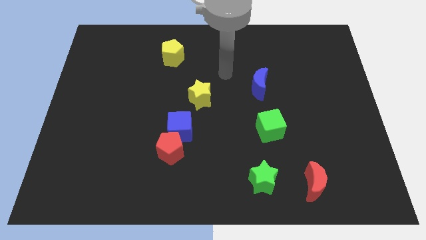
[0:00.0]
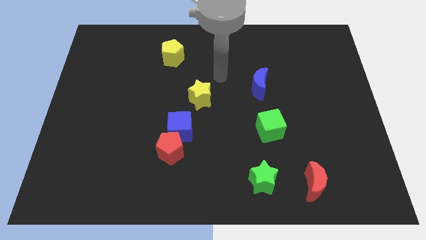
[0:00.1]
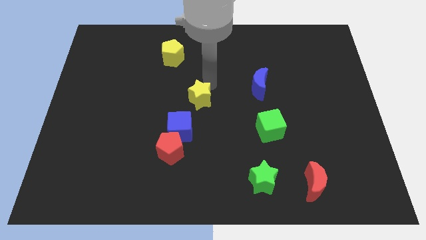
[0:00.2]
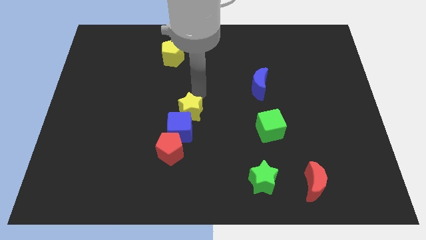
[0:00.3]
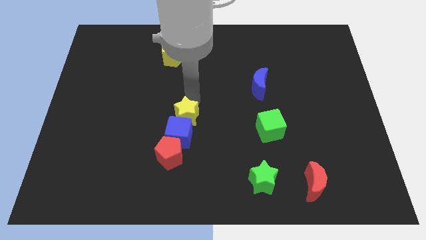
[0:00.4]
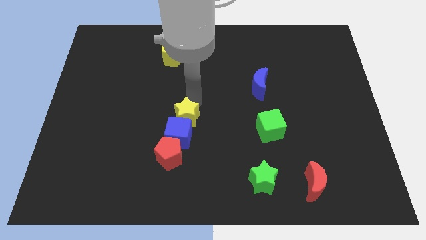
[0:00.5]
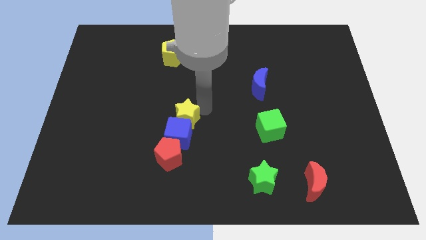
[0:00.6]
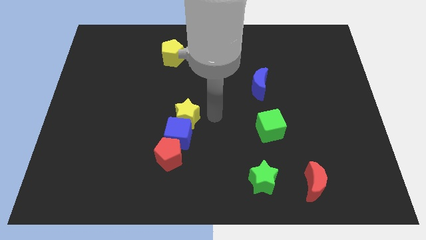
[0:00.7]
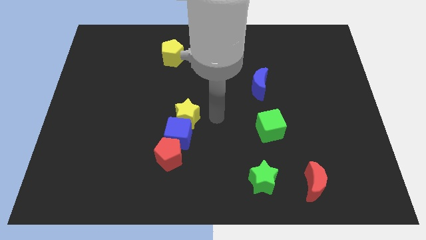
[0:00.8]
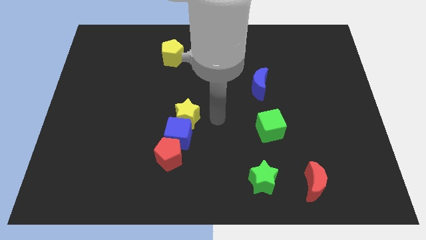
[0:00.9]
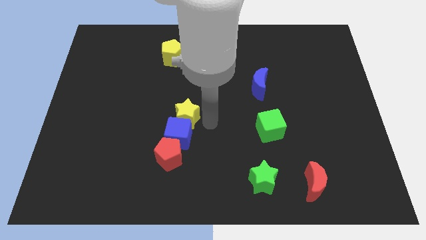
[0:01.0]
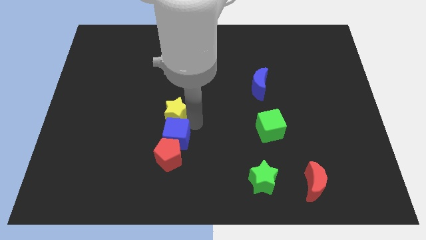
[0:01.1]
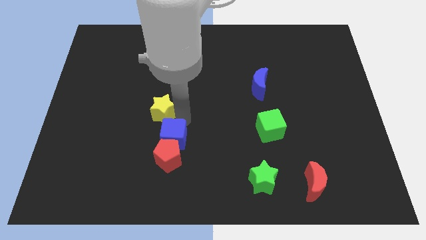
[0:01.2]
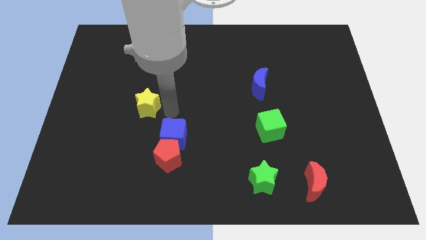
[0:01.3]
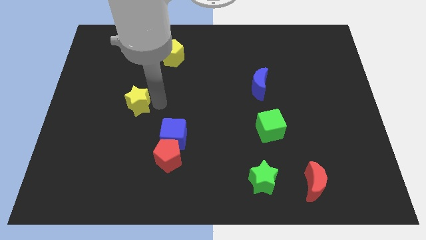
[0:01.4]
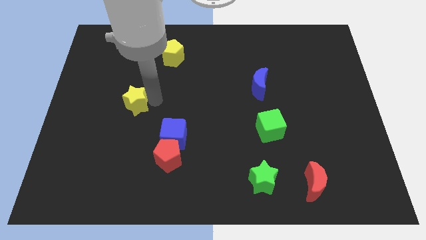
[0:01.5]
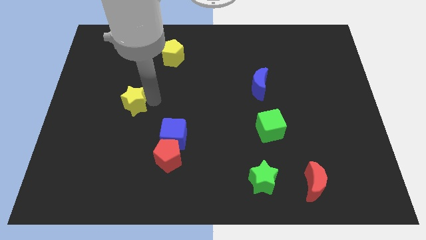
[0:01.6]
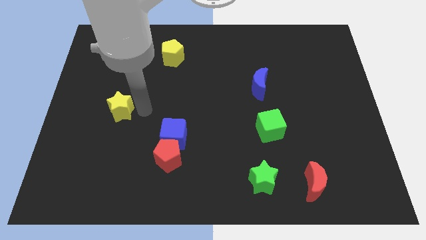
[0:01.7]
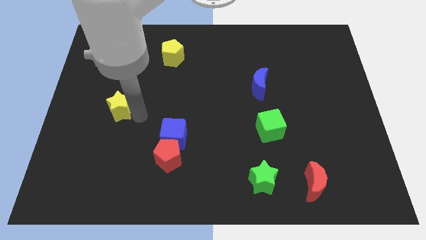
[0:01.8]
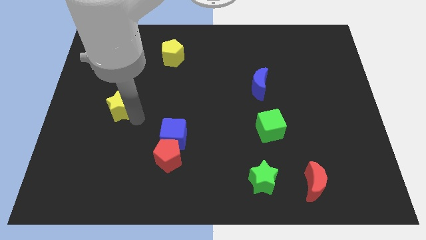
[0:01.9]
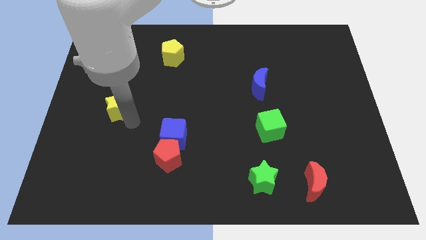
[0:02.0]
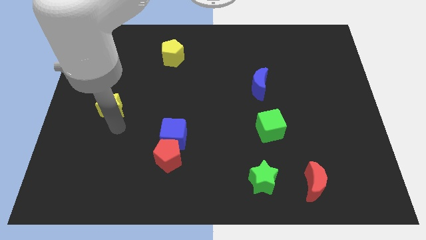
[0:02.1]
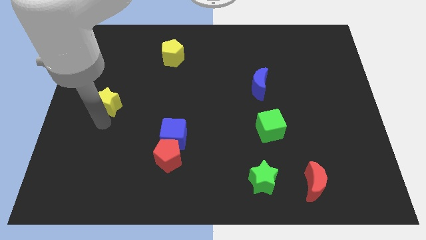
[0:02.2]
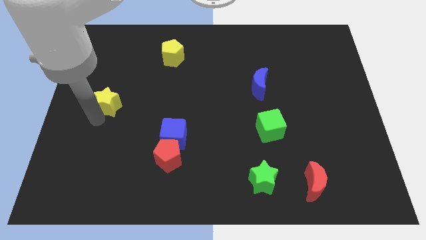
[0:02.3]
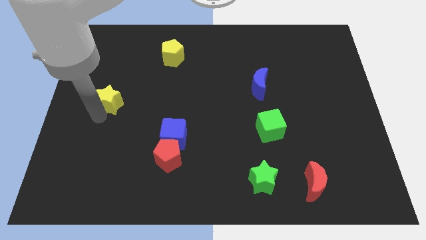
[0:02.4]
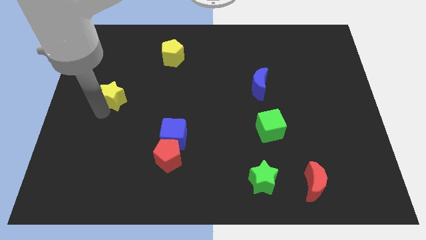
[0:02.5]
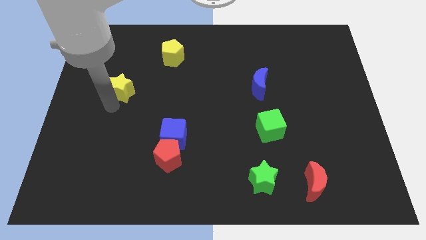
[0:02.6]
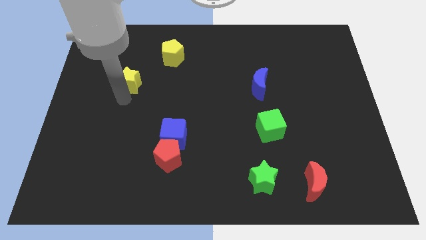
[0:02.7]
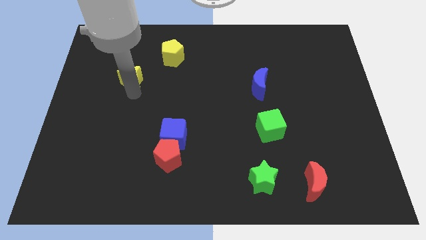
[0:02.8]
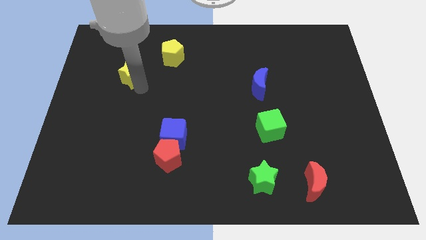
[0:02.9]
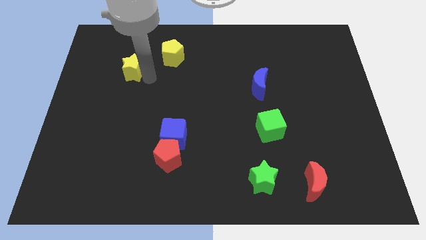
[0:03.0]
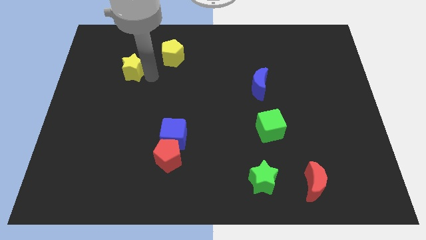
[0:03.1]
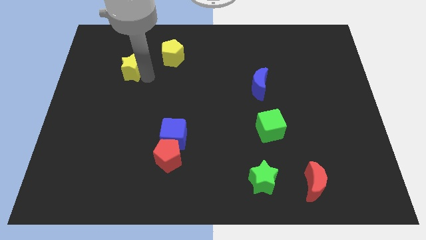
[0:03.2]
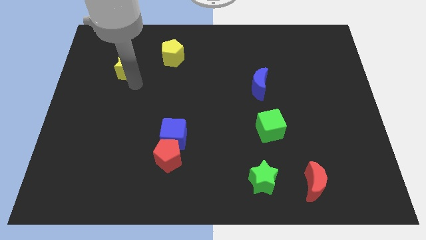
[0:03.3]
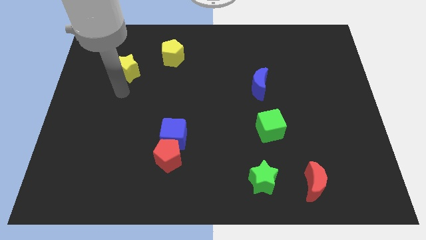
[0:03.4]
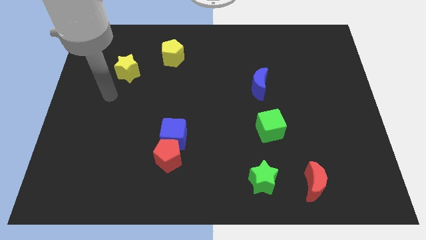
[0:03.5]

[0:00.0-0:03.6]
push the yellow star to the left of the yellow pentagon

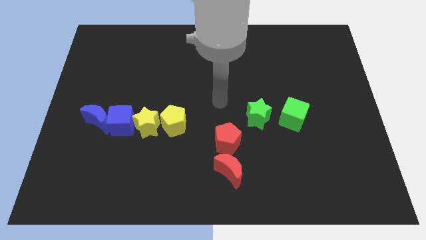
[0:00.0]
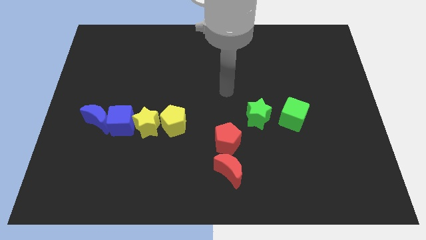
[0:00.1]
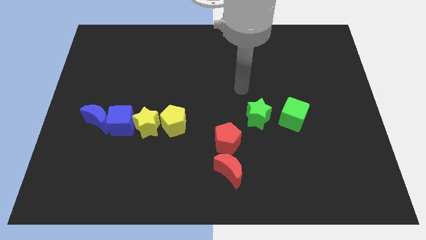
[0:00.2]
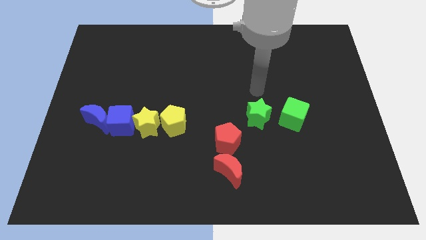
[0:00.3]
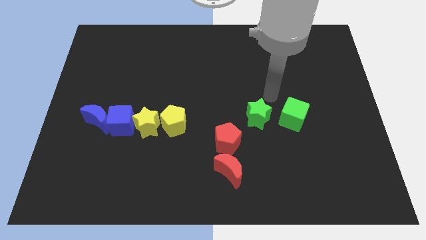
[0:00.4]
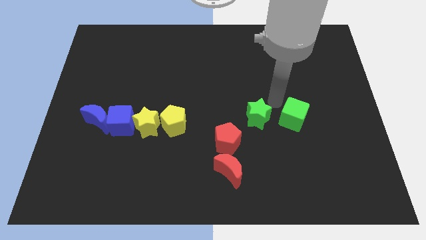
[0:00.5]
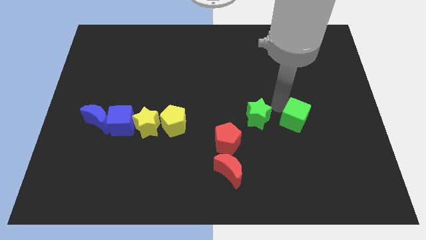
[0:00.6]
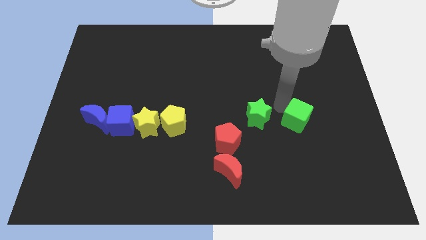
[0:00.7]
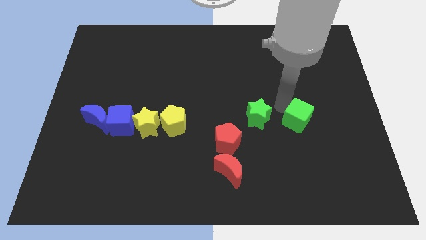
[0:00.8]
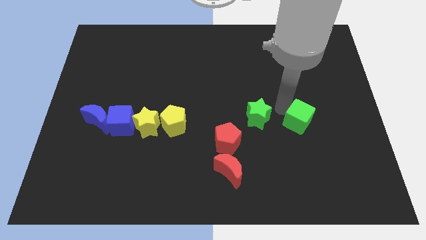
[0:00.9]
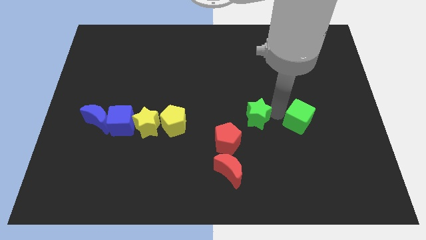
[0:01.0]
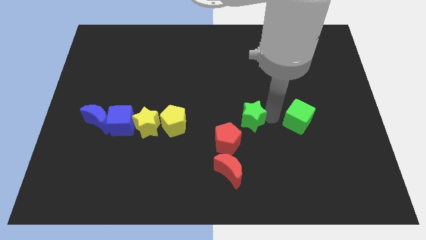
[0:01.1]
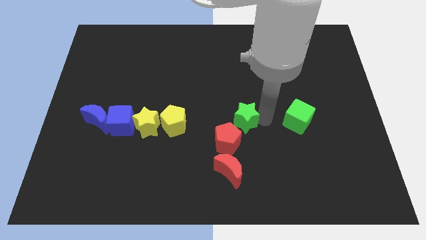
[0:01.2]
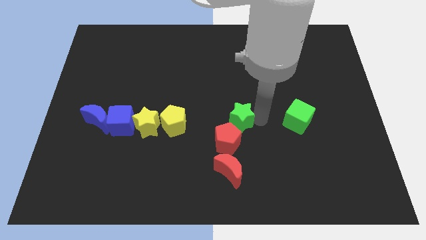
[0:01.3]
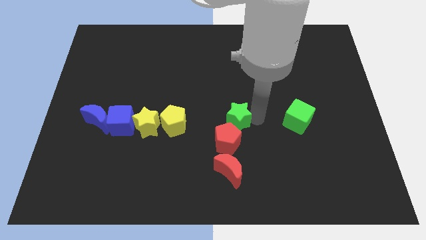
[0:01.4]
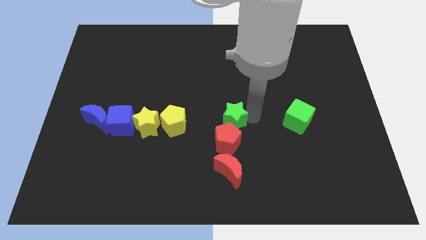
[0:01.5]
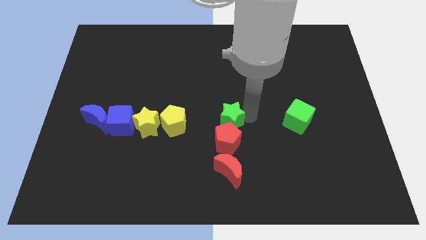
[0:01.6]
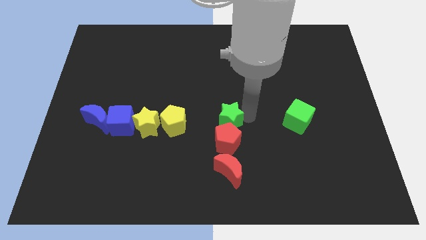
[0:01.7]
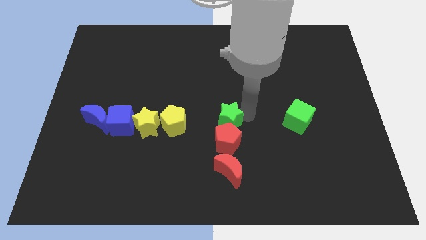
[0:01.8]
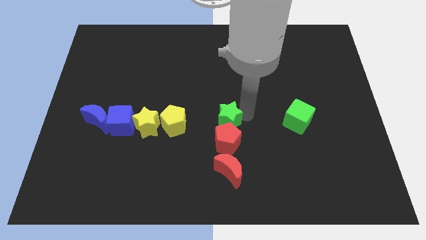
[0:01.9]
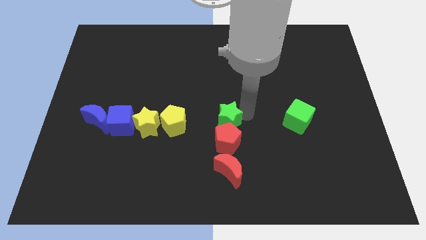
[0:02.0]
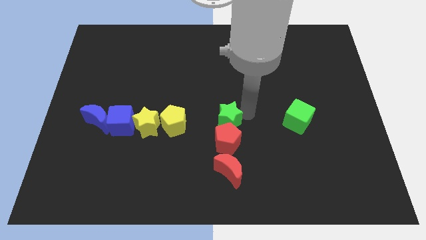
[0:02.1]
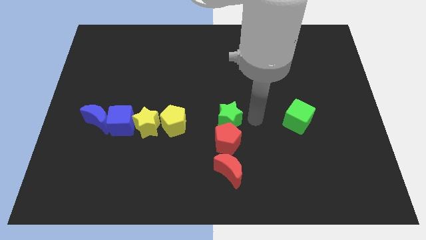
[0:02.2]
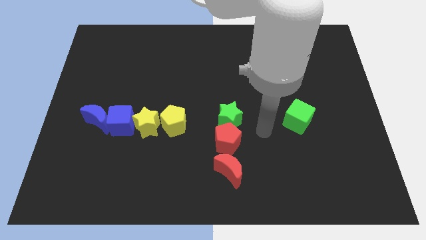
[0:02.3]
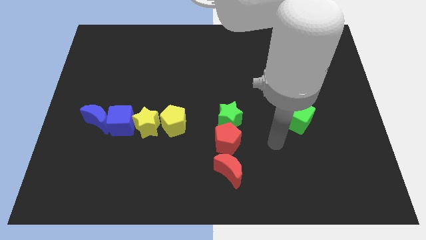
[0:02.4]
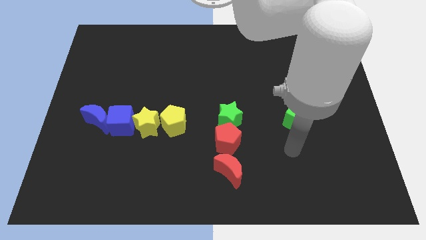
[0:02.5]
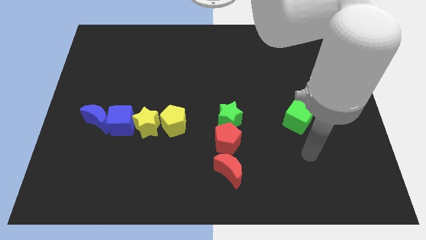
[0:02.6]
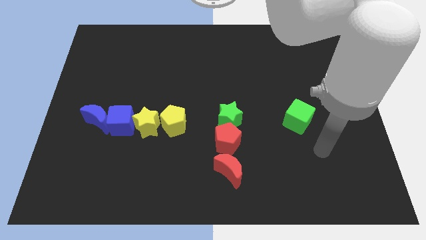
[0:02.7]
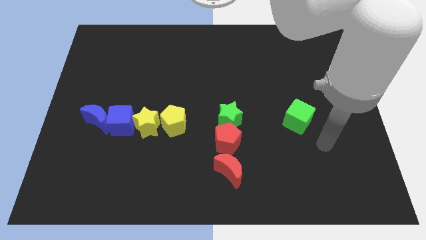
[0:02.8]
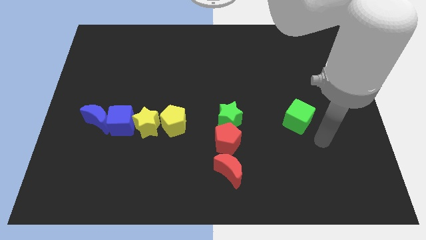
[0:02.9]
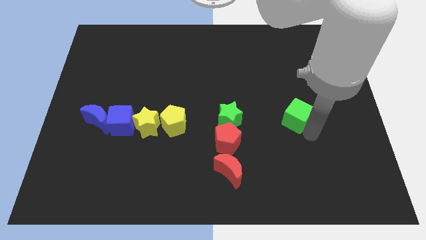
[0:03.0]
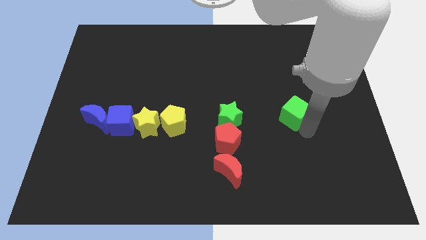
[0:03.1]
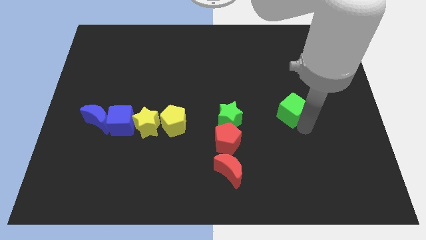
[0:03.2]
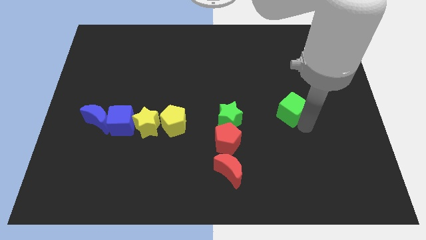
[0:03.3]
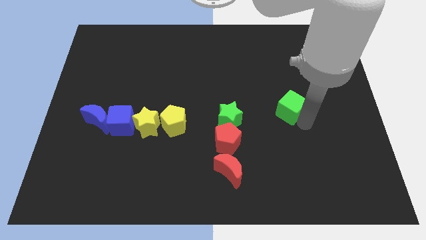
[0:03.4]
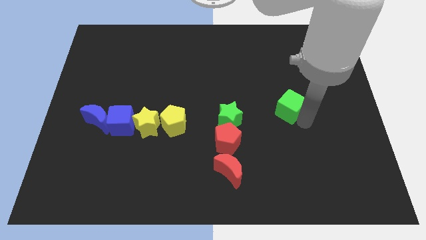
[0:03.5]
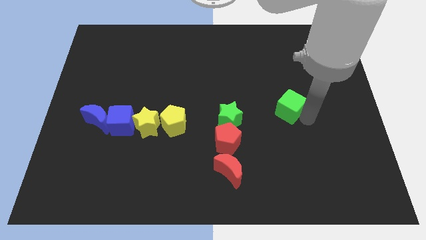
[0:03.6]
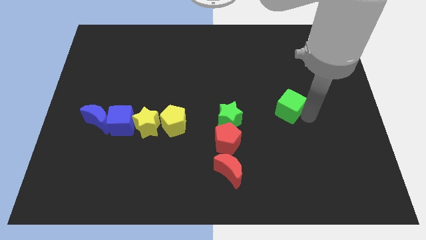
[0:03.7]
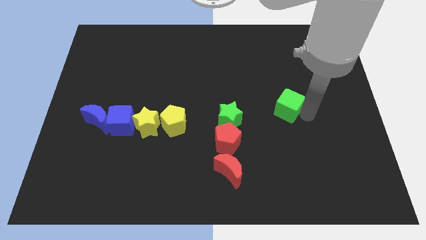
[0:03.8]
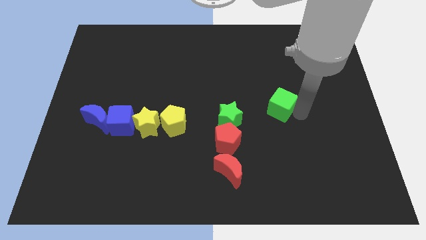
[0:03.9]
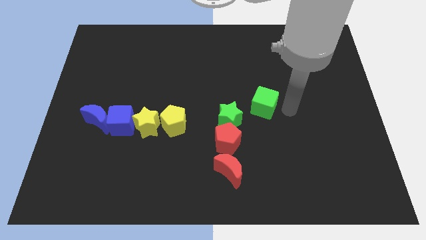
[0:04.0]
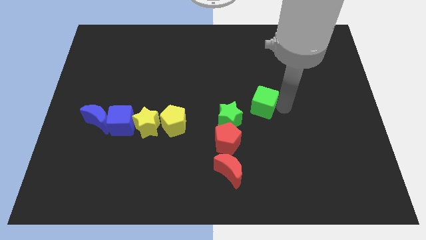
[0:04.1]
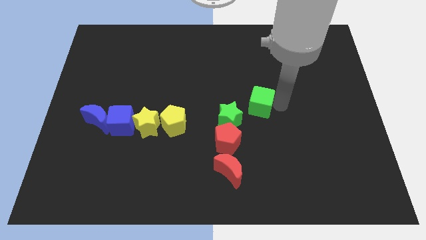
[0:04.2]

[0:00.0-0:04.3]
move the green cube to the top right of the green star

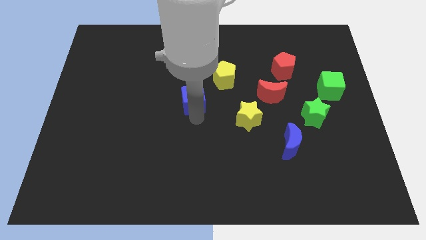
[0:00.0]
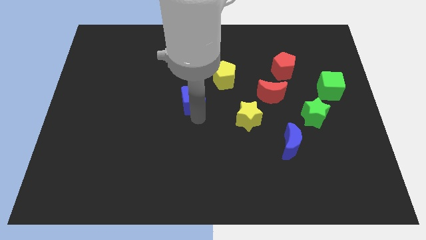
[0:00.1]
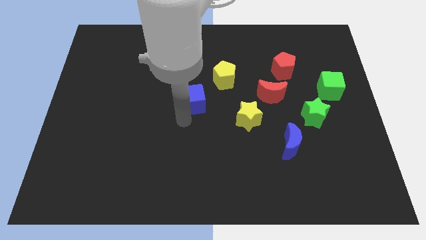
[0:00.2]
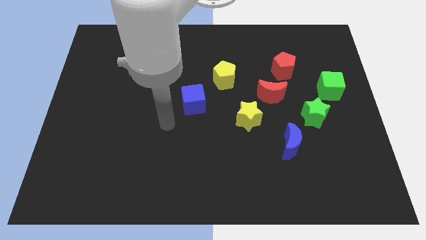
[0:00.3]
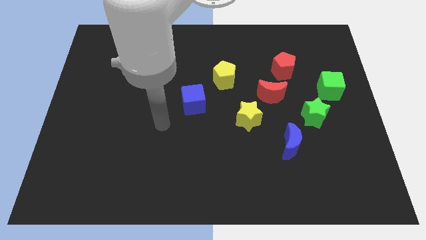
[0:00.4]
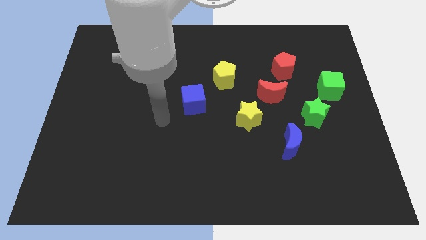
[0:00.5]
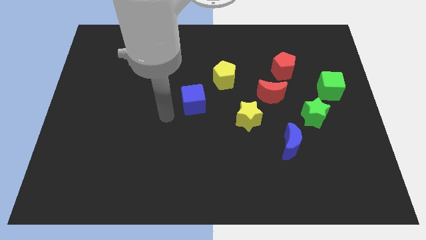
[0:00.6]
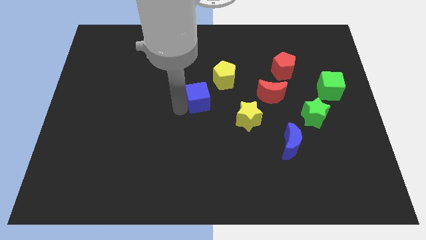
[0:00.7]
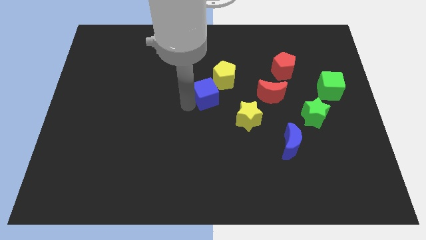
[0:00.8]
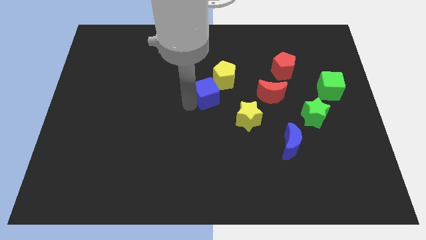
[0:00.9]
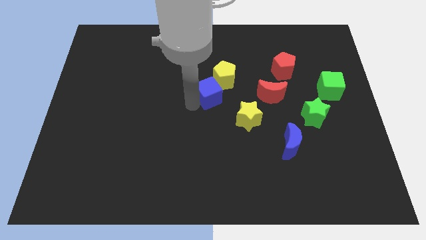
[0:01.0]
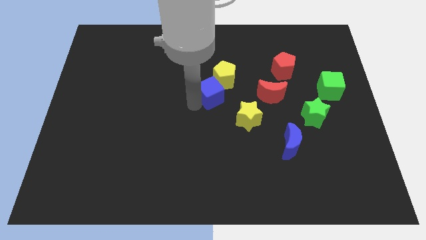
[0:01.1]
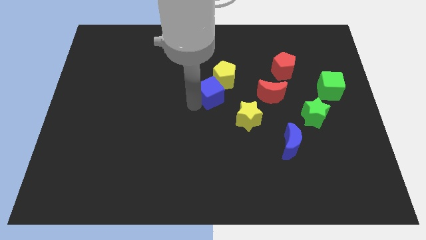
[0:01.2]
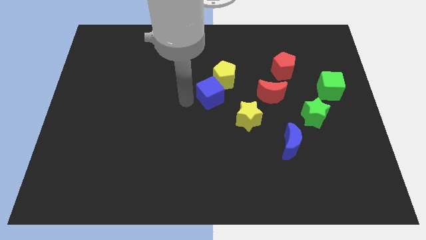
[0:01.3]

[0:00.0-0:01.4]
push the blue cube to the left of the yellow pentagon
